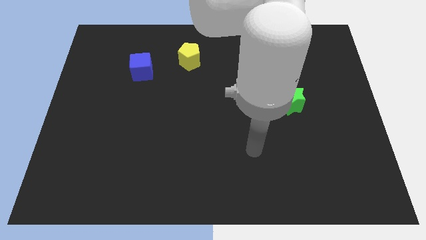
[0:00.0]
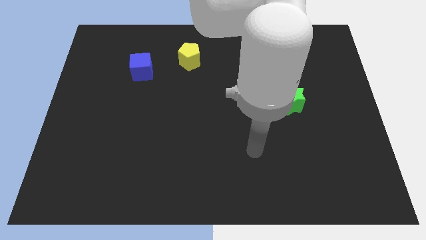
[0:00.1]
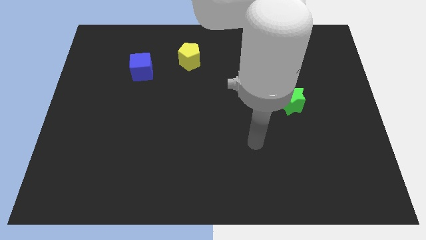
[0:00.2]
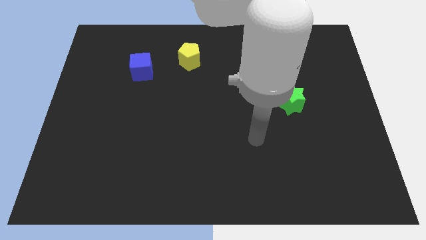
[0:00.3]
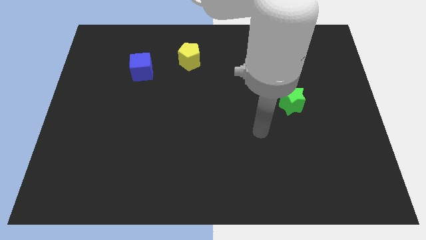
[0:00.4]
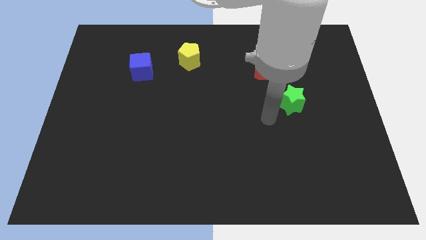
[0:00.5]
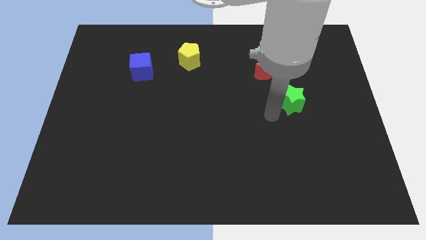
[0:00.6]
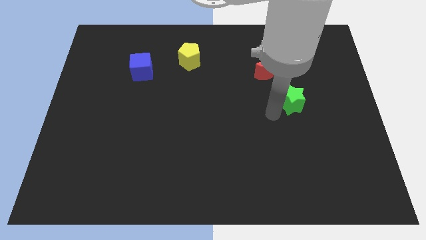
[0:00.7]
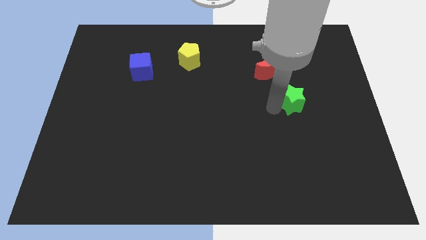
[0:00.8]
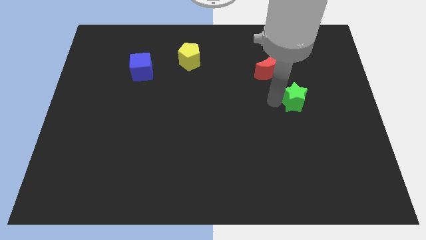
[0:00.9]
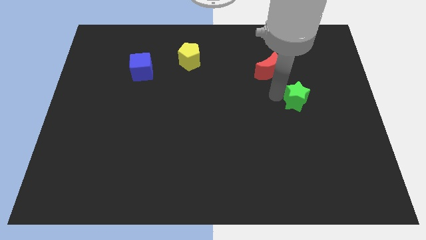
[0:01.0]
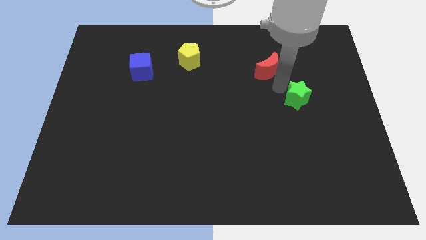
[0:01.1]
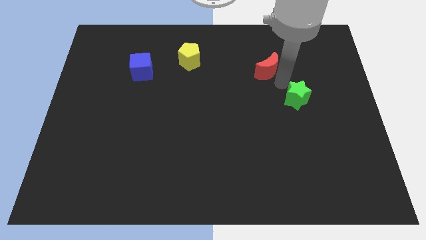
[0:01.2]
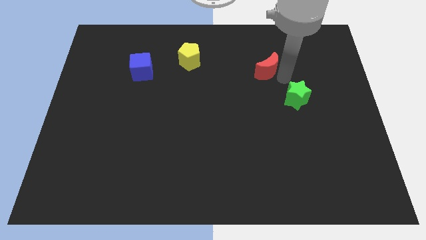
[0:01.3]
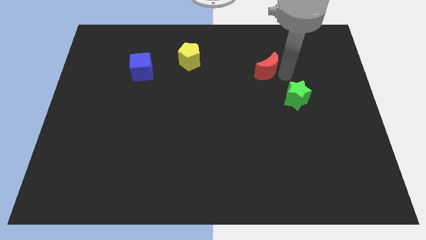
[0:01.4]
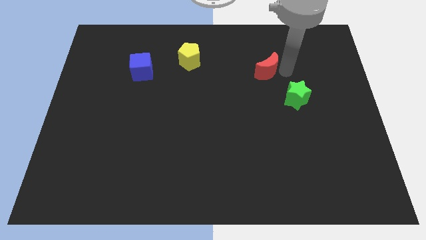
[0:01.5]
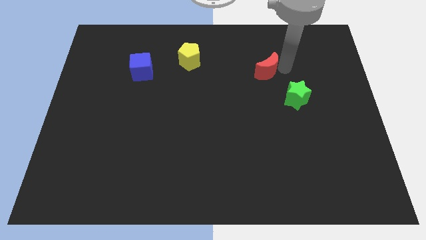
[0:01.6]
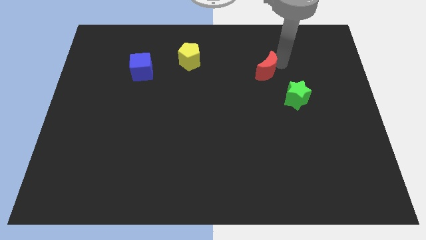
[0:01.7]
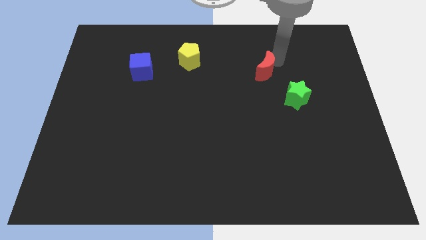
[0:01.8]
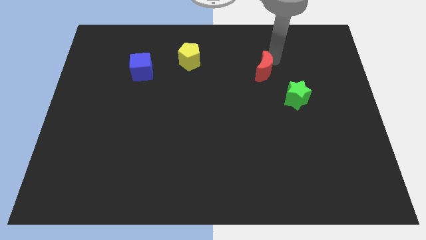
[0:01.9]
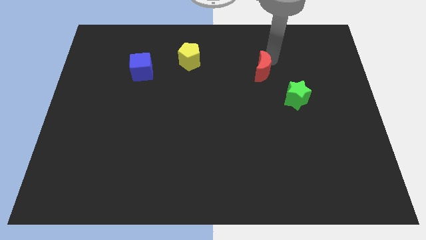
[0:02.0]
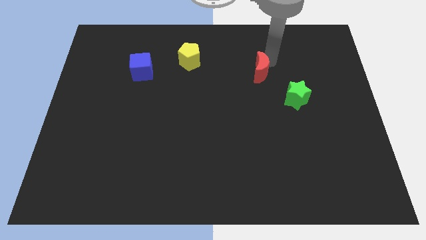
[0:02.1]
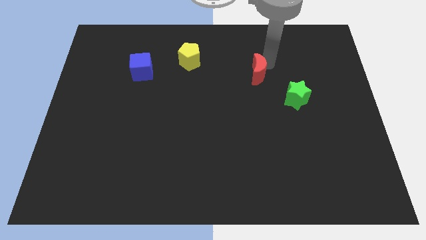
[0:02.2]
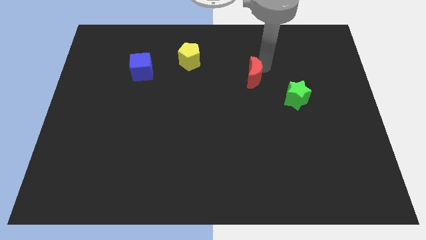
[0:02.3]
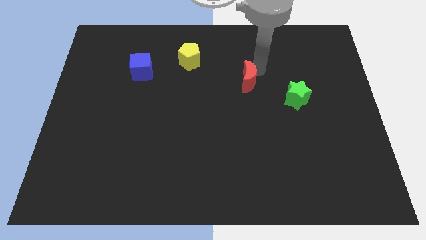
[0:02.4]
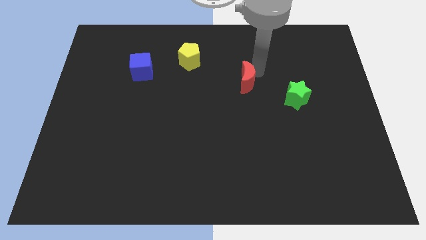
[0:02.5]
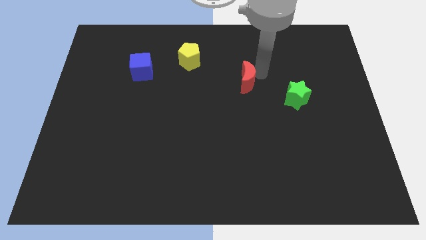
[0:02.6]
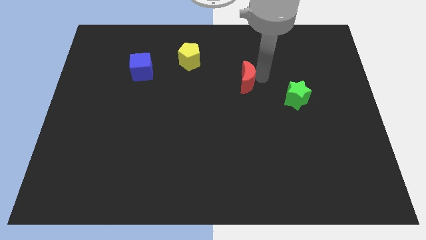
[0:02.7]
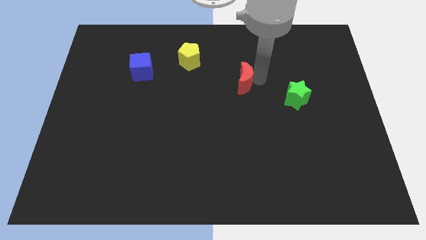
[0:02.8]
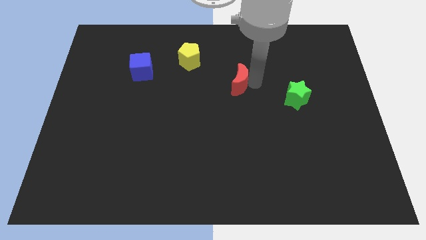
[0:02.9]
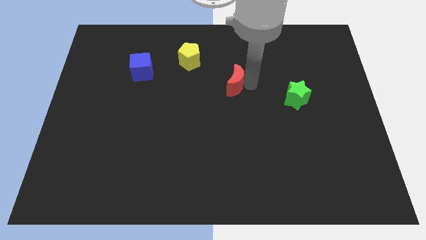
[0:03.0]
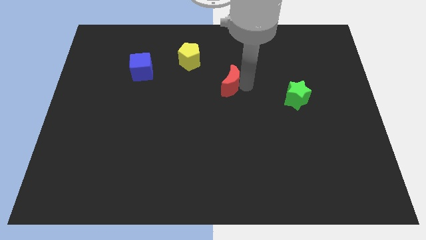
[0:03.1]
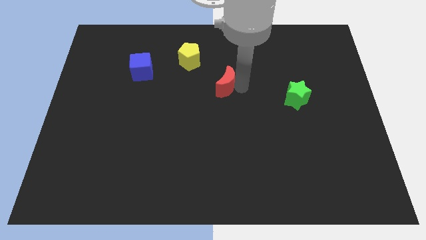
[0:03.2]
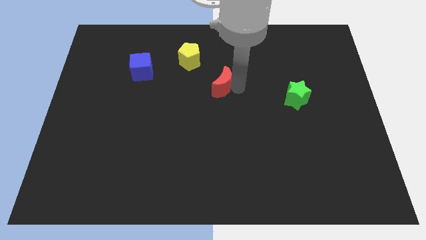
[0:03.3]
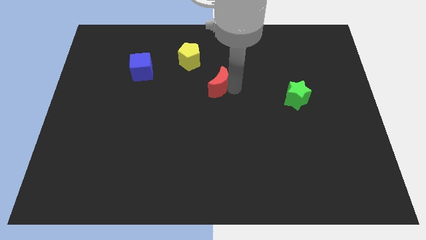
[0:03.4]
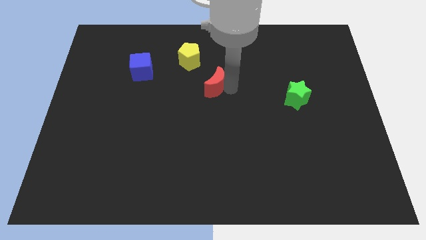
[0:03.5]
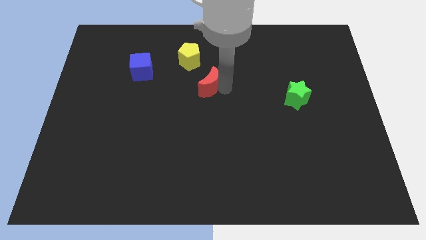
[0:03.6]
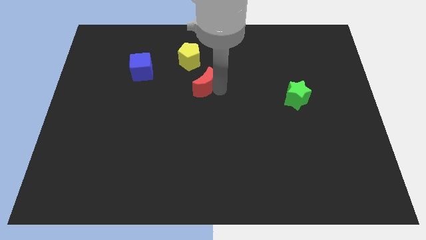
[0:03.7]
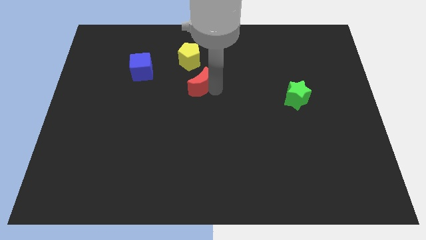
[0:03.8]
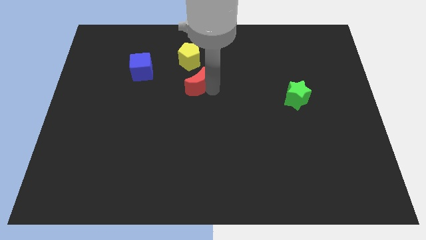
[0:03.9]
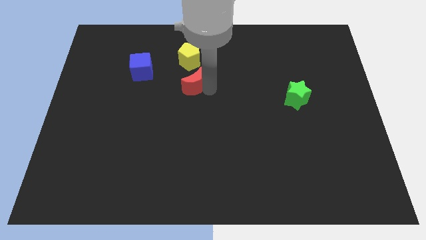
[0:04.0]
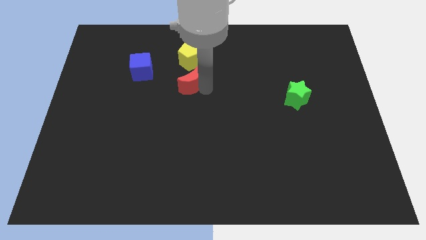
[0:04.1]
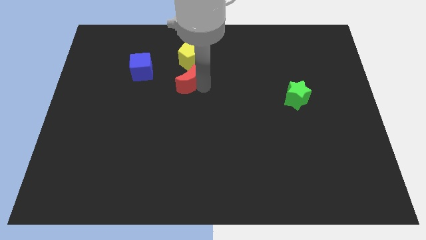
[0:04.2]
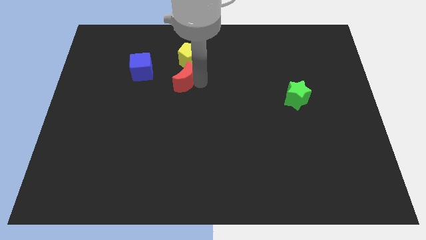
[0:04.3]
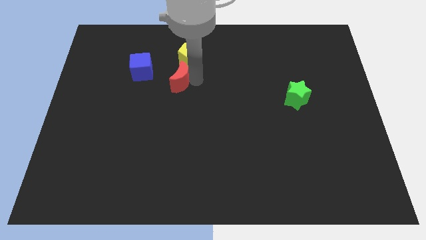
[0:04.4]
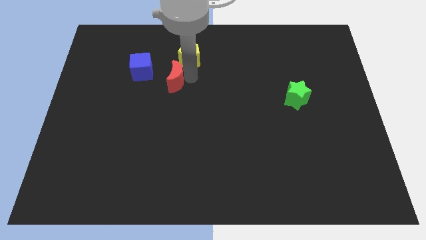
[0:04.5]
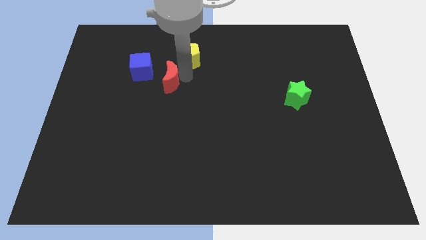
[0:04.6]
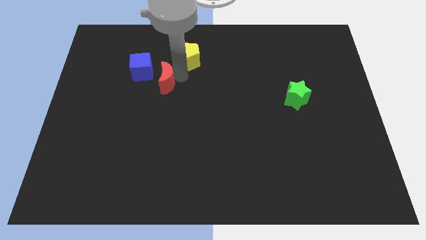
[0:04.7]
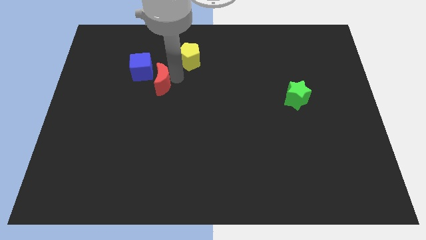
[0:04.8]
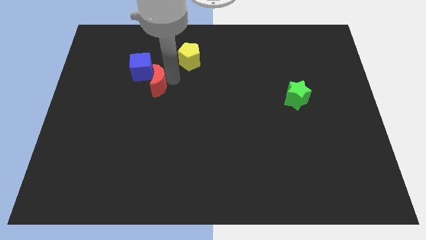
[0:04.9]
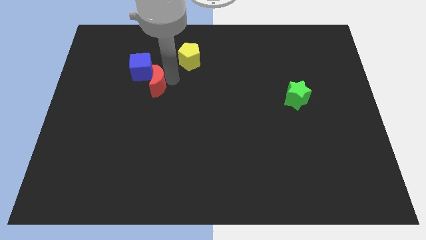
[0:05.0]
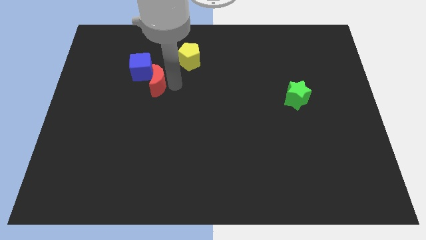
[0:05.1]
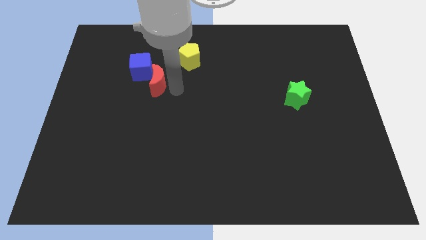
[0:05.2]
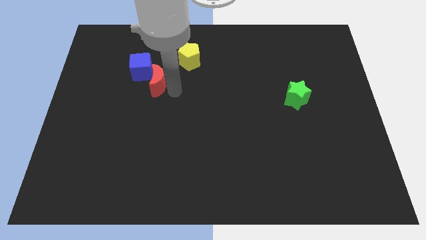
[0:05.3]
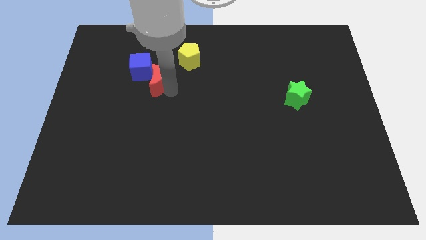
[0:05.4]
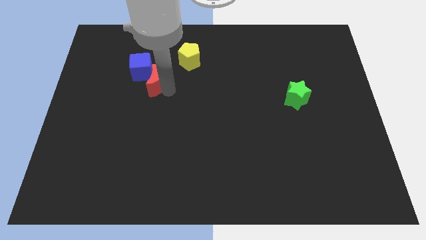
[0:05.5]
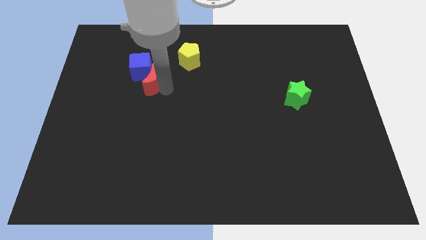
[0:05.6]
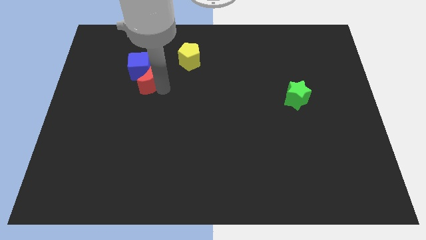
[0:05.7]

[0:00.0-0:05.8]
push the moon next to the blue block

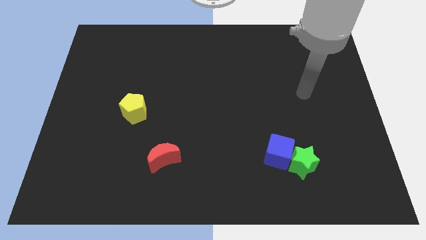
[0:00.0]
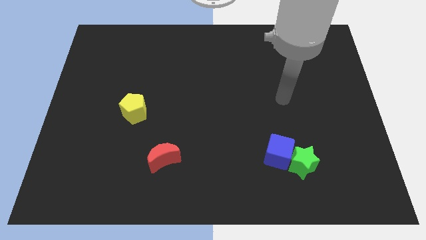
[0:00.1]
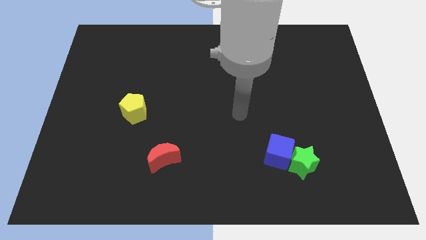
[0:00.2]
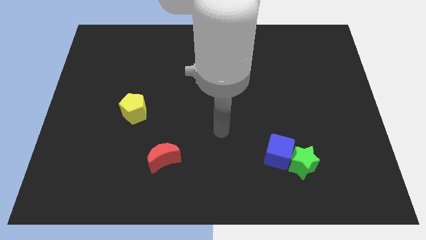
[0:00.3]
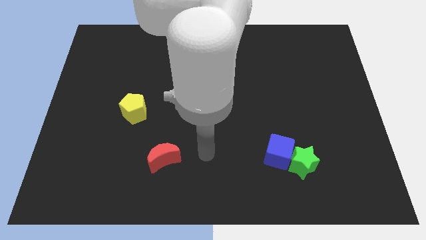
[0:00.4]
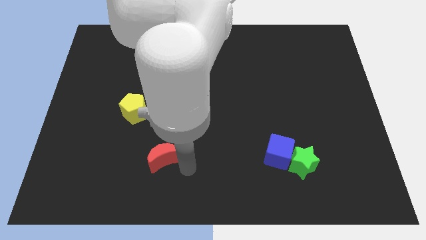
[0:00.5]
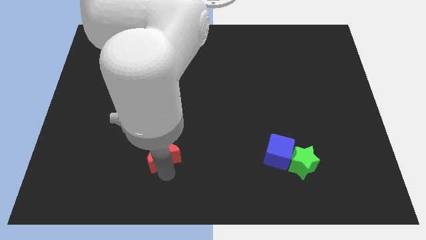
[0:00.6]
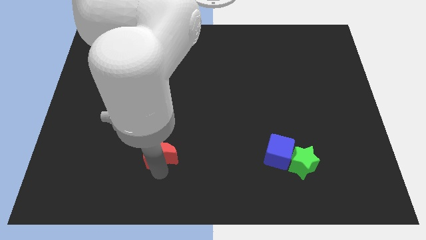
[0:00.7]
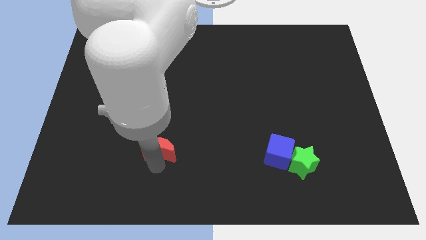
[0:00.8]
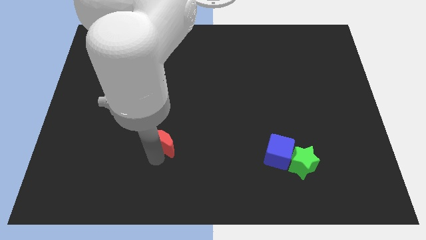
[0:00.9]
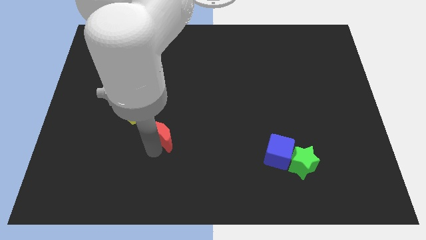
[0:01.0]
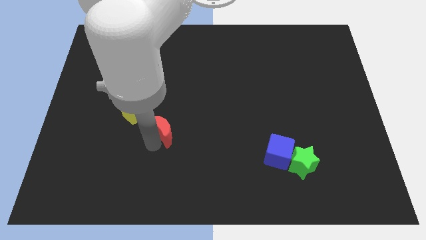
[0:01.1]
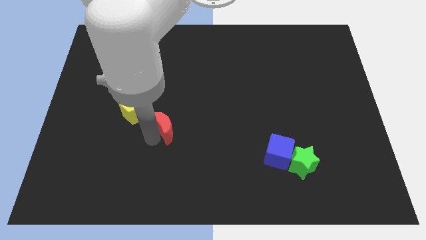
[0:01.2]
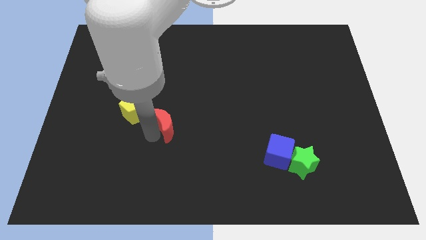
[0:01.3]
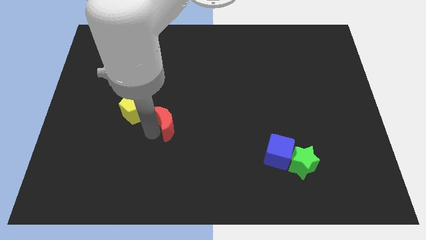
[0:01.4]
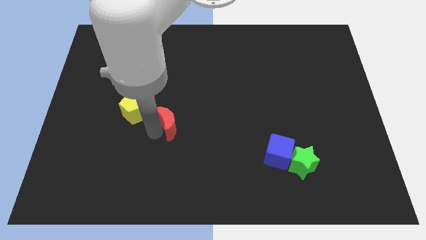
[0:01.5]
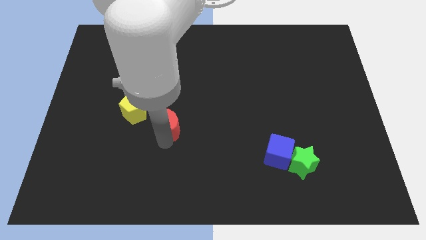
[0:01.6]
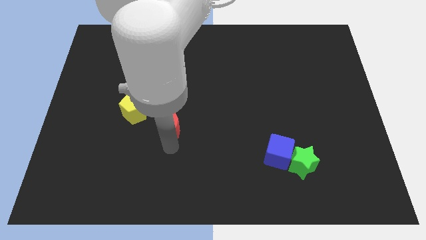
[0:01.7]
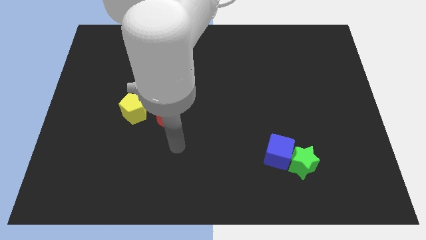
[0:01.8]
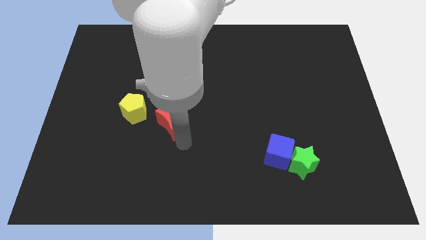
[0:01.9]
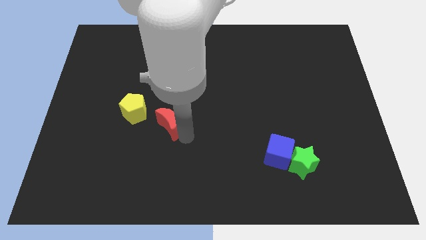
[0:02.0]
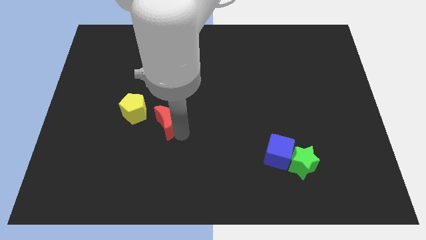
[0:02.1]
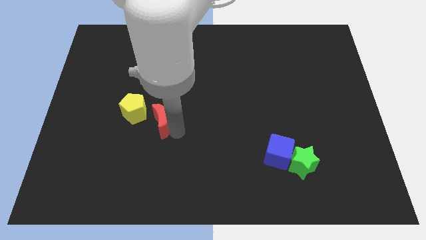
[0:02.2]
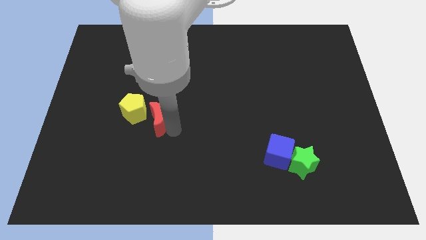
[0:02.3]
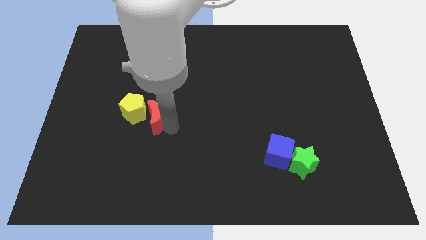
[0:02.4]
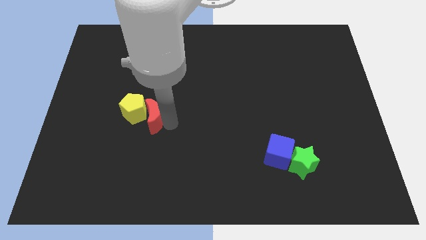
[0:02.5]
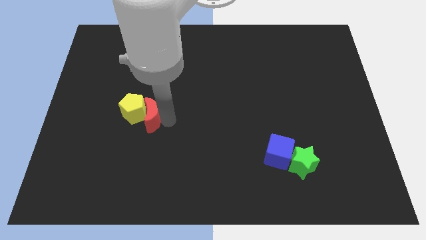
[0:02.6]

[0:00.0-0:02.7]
push the moon to the yellow pentagon

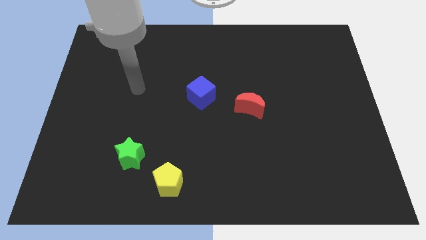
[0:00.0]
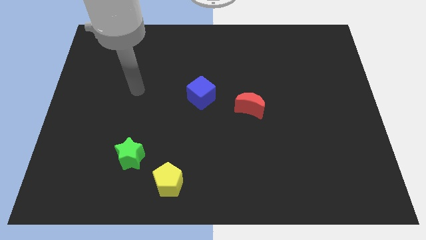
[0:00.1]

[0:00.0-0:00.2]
put the green star next to the yellow block
